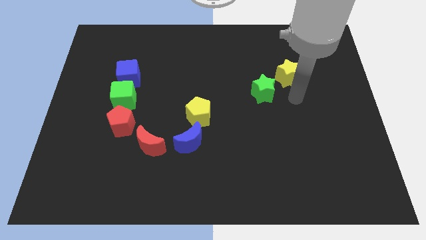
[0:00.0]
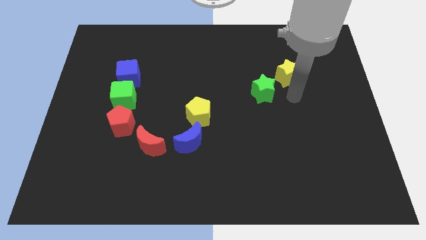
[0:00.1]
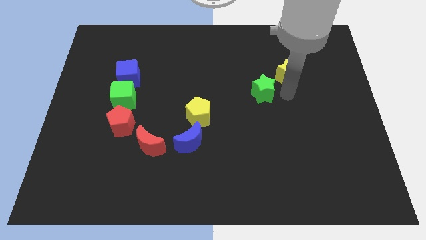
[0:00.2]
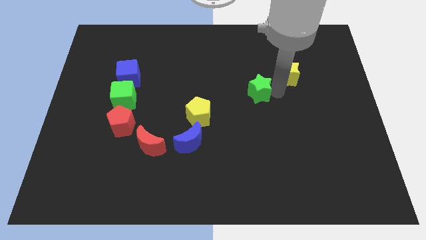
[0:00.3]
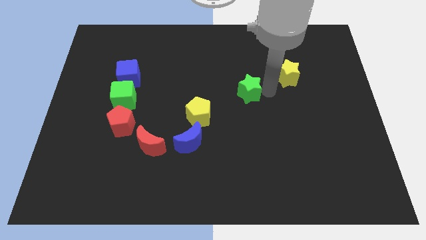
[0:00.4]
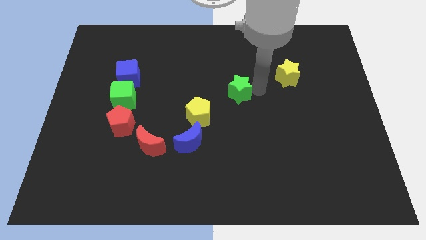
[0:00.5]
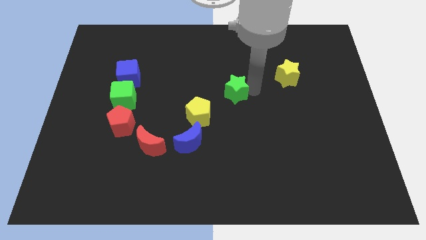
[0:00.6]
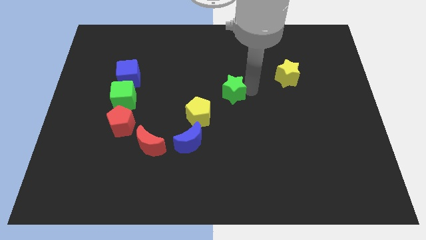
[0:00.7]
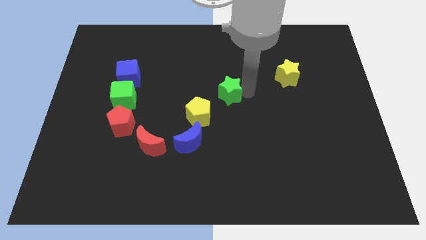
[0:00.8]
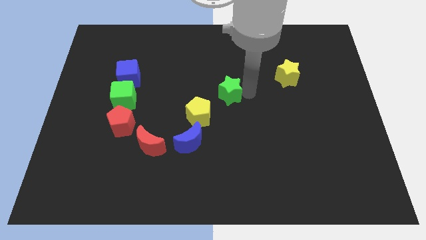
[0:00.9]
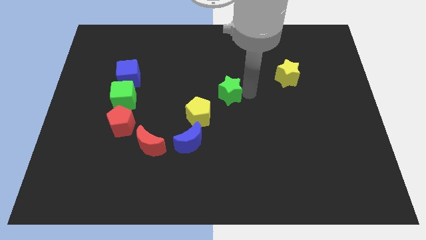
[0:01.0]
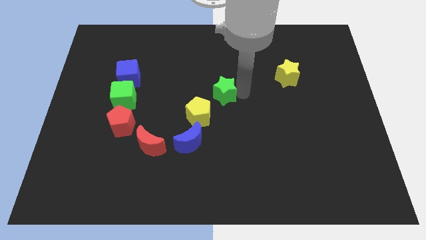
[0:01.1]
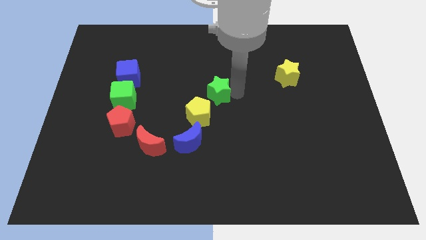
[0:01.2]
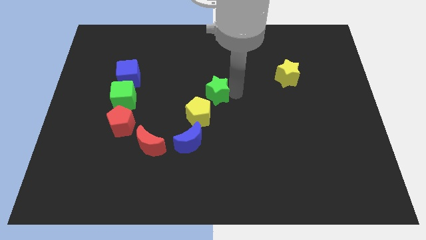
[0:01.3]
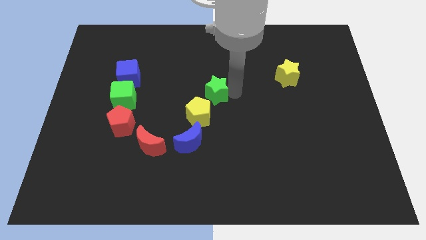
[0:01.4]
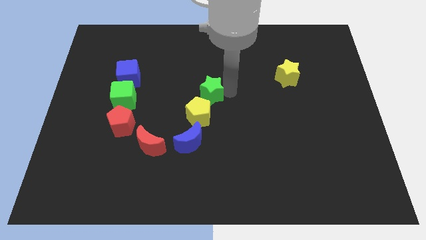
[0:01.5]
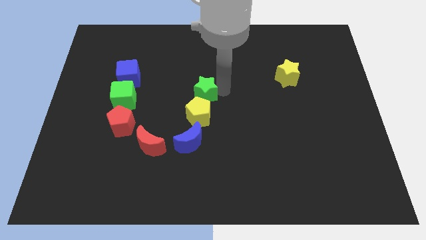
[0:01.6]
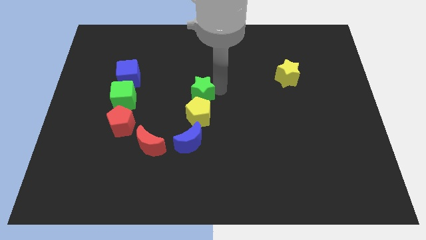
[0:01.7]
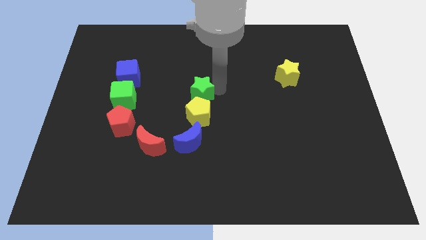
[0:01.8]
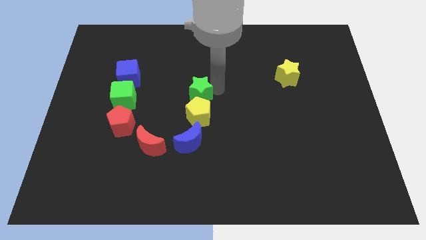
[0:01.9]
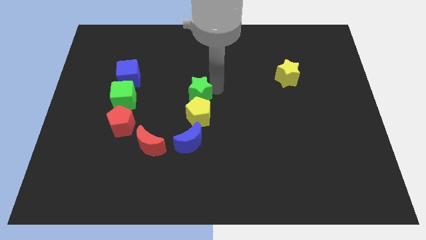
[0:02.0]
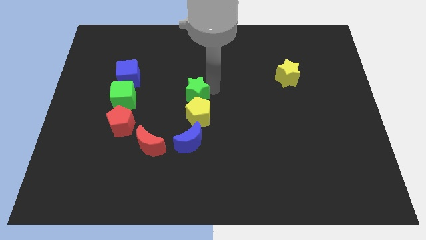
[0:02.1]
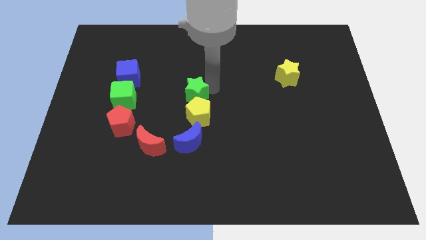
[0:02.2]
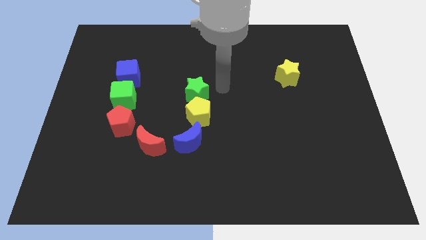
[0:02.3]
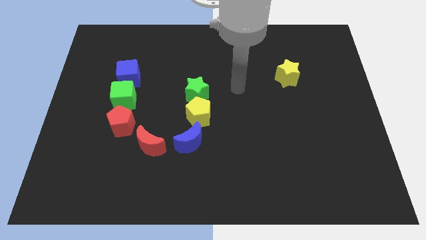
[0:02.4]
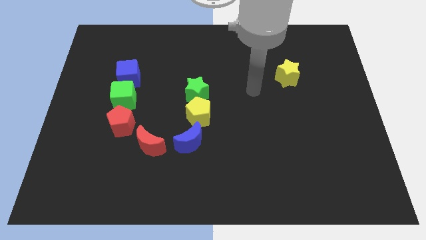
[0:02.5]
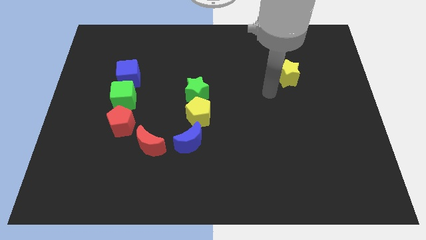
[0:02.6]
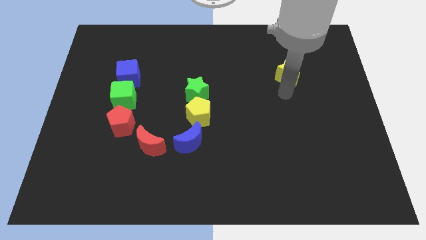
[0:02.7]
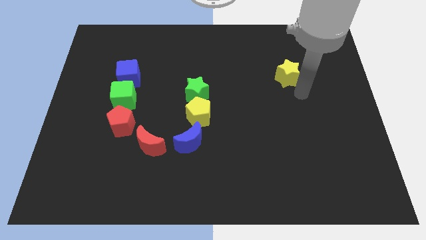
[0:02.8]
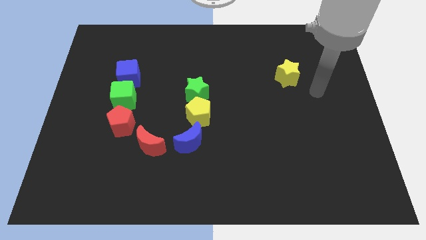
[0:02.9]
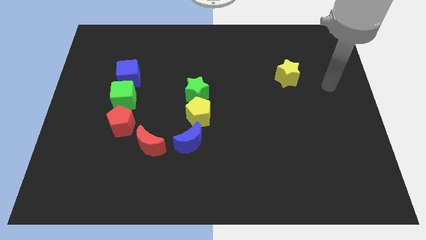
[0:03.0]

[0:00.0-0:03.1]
place the green star above the yellow pentagon

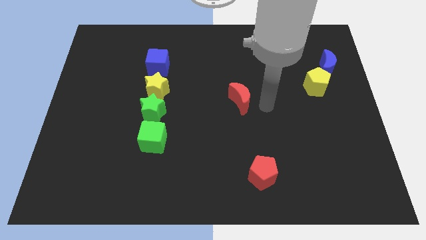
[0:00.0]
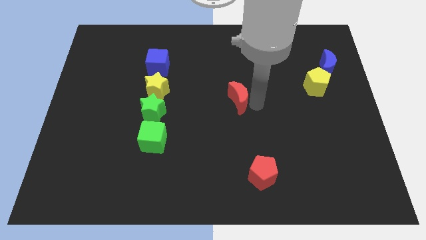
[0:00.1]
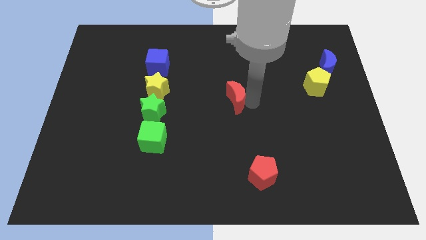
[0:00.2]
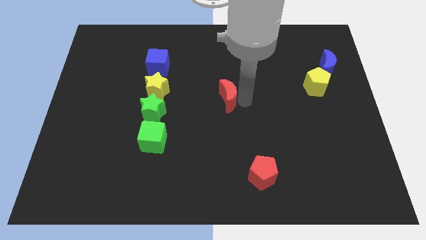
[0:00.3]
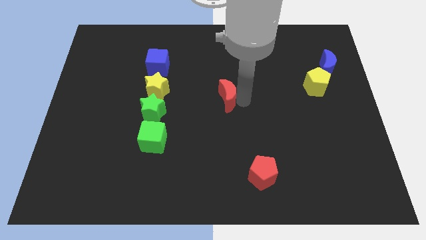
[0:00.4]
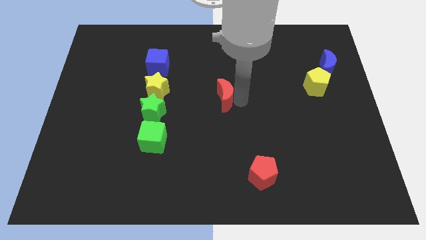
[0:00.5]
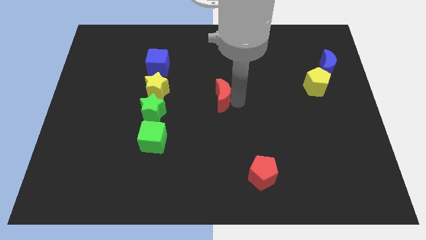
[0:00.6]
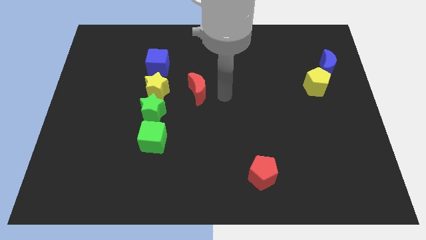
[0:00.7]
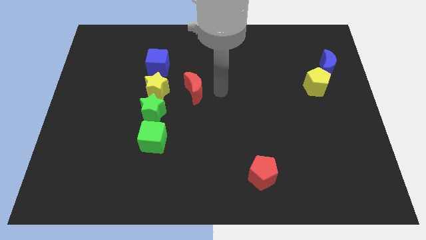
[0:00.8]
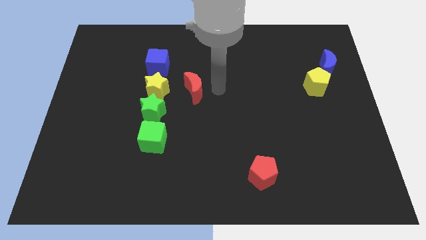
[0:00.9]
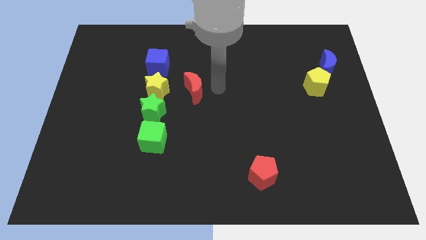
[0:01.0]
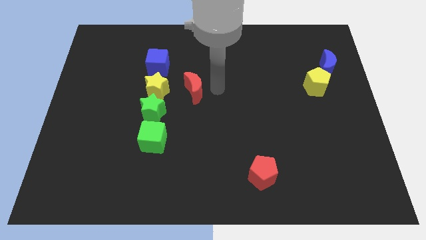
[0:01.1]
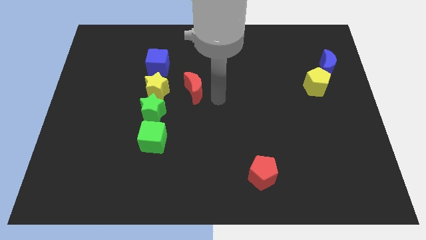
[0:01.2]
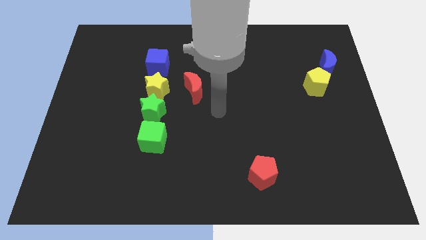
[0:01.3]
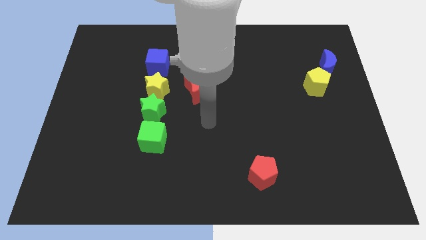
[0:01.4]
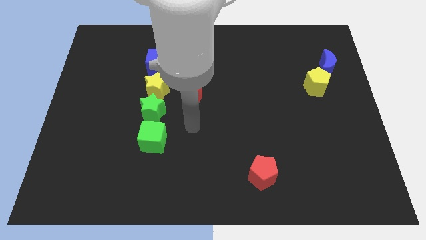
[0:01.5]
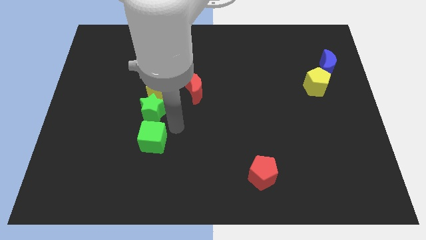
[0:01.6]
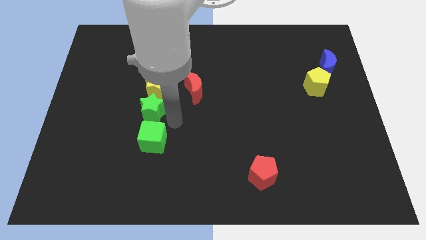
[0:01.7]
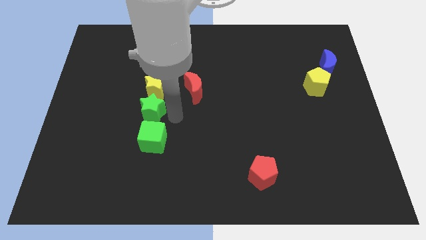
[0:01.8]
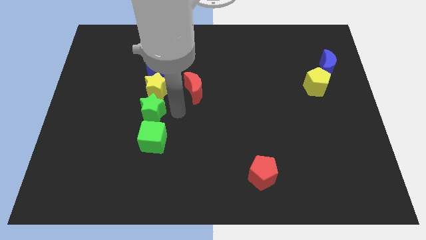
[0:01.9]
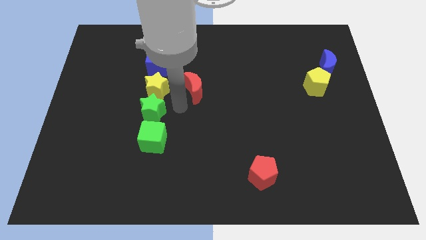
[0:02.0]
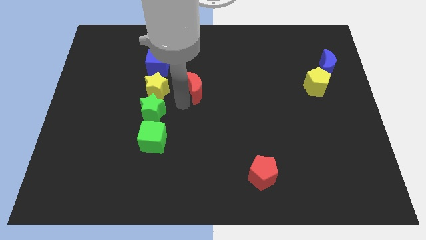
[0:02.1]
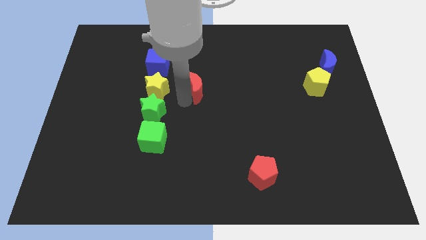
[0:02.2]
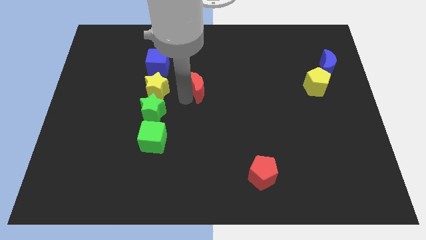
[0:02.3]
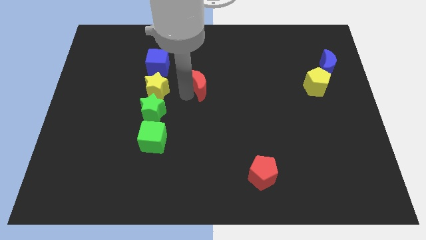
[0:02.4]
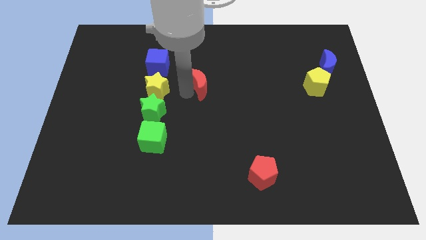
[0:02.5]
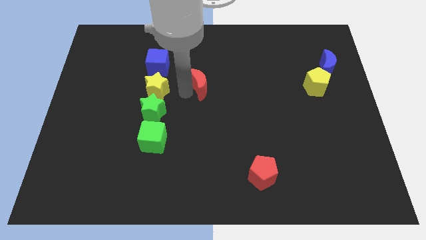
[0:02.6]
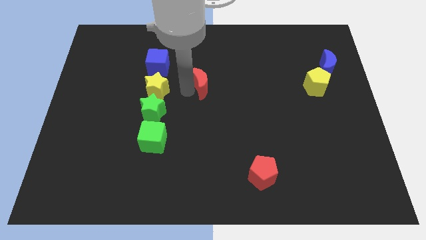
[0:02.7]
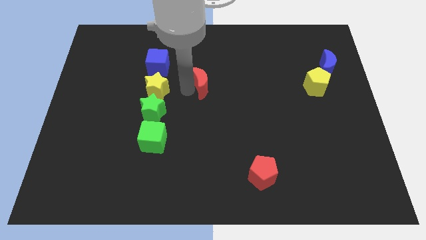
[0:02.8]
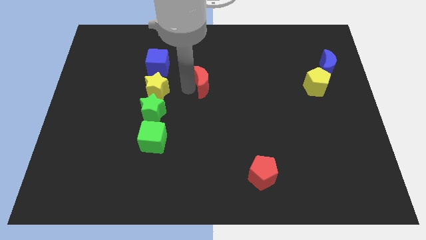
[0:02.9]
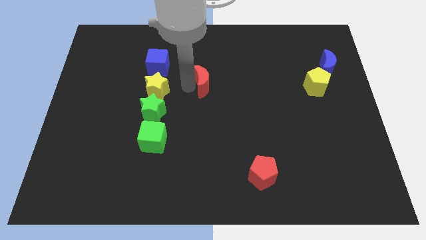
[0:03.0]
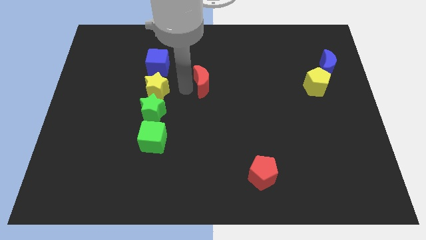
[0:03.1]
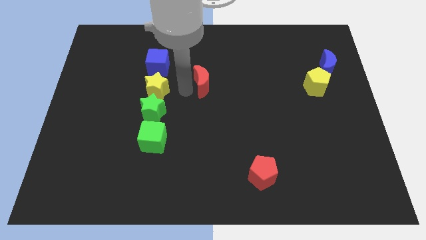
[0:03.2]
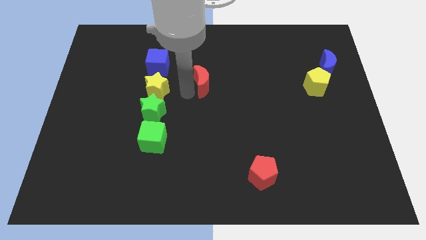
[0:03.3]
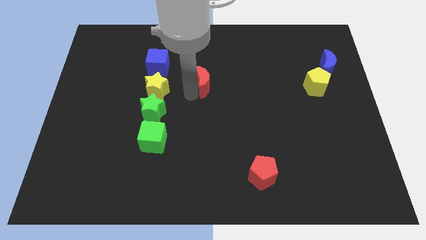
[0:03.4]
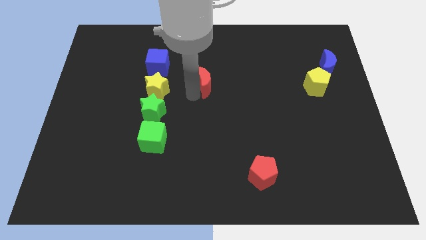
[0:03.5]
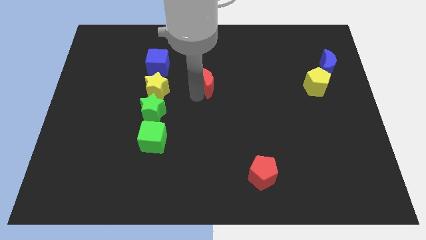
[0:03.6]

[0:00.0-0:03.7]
slide the red moon towards the yellow star

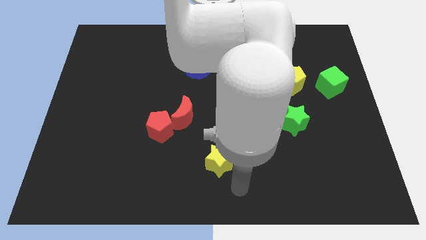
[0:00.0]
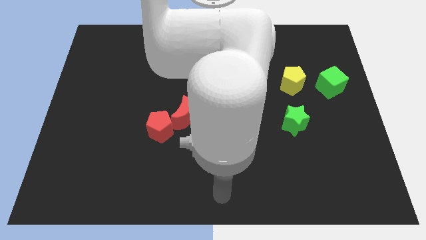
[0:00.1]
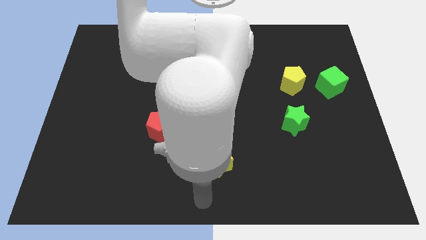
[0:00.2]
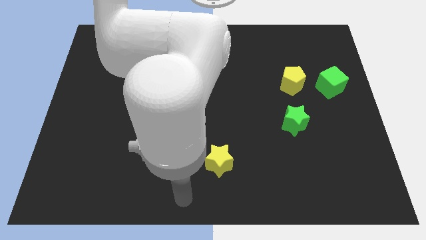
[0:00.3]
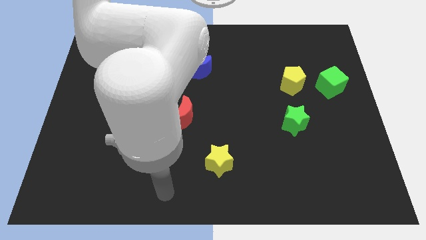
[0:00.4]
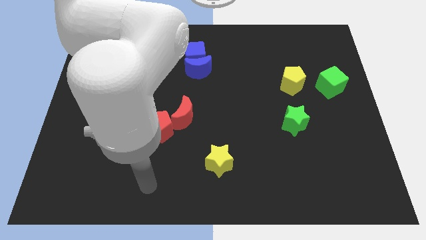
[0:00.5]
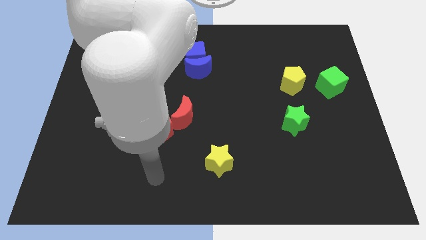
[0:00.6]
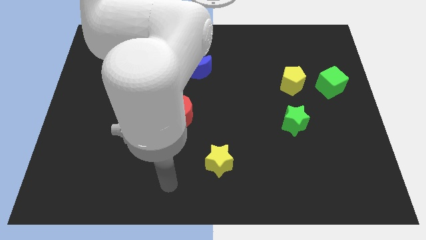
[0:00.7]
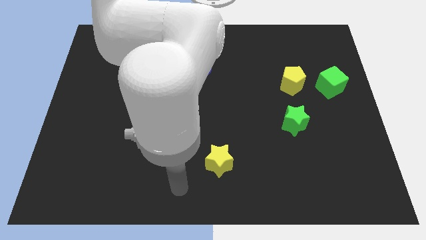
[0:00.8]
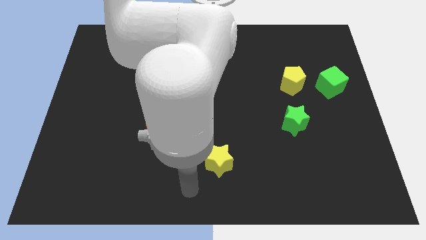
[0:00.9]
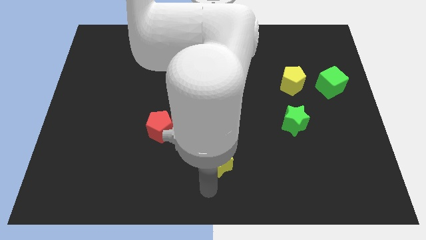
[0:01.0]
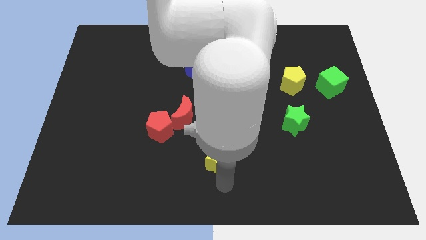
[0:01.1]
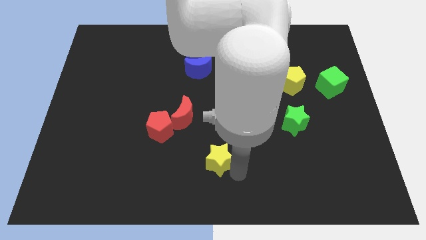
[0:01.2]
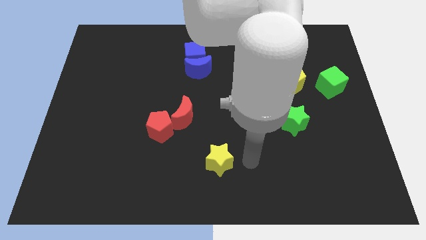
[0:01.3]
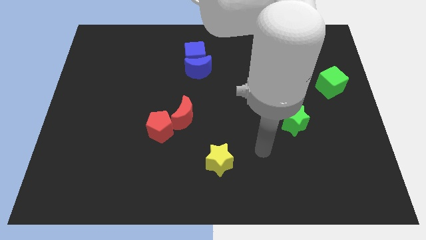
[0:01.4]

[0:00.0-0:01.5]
place your arm between green star and yellow star

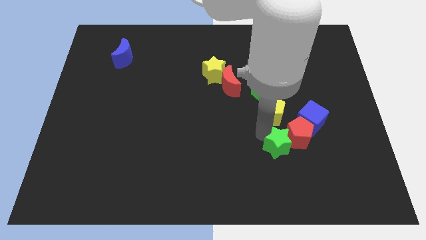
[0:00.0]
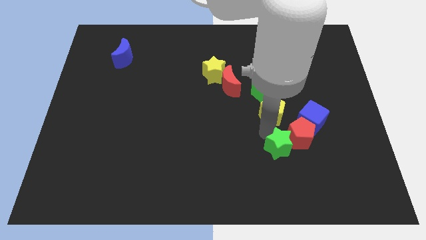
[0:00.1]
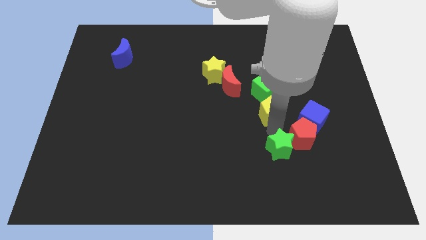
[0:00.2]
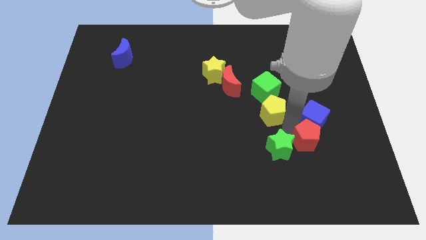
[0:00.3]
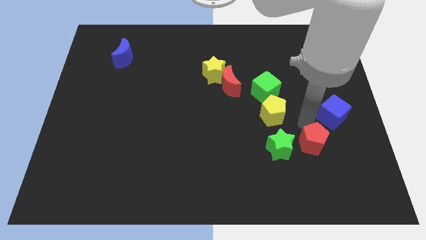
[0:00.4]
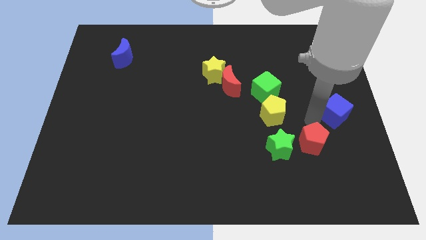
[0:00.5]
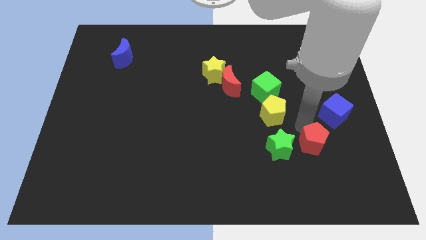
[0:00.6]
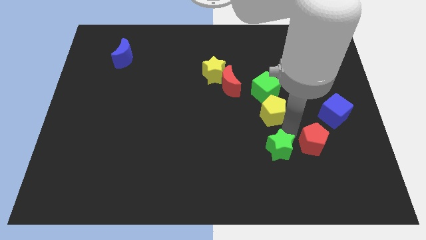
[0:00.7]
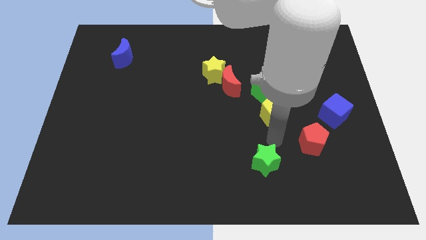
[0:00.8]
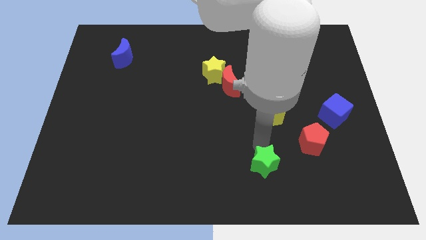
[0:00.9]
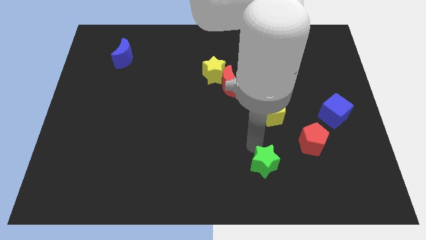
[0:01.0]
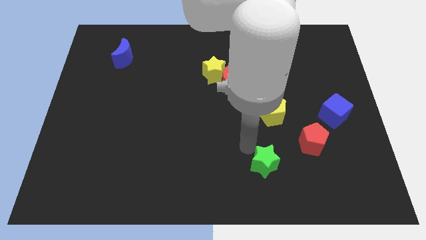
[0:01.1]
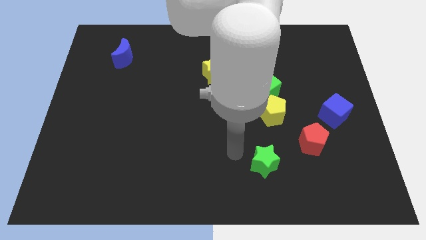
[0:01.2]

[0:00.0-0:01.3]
separate the green star from the red pentagon
